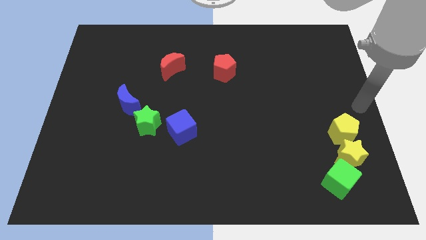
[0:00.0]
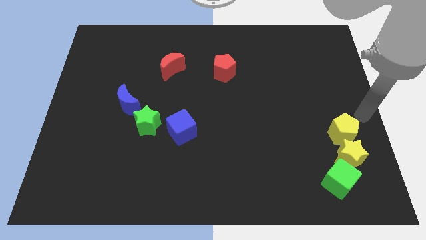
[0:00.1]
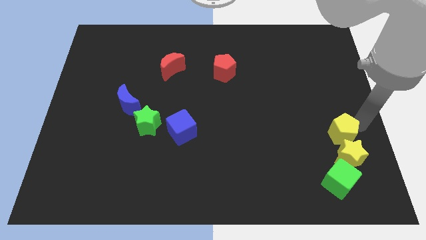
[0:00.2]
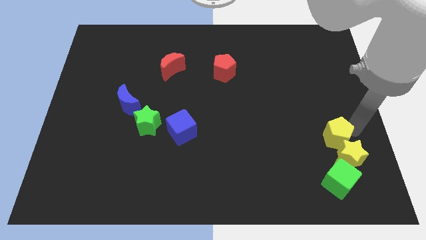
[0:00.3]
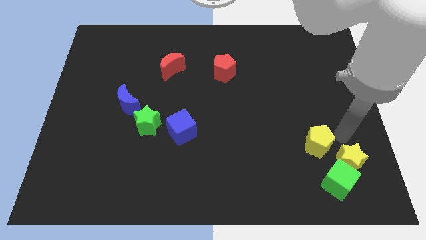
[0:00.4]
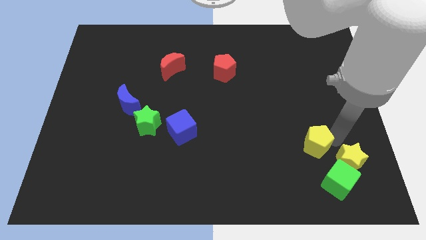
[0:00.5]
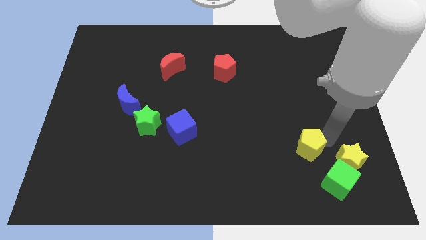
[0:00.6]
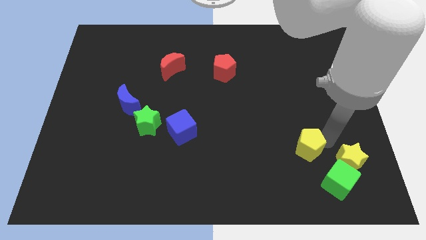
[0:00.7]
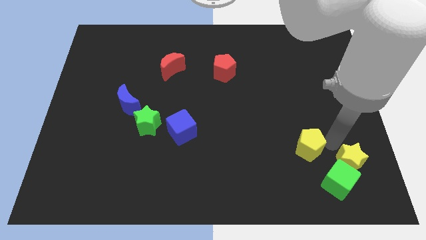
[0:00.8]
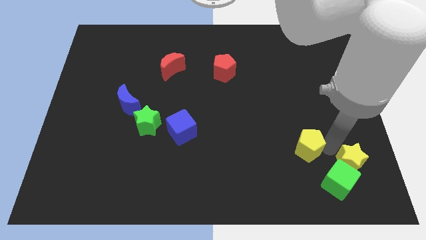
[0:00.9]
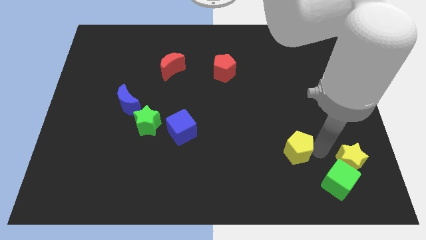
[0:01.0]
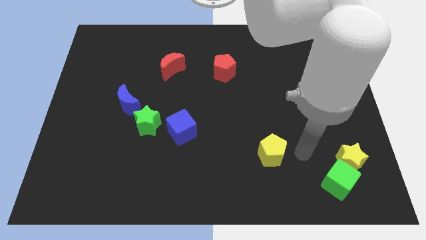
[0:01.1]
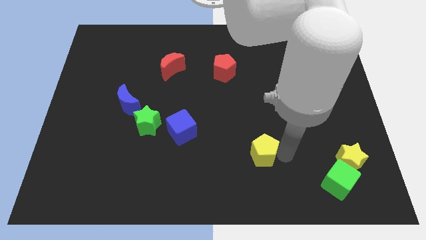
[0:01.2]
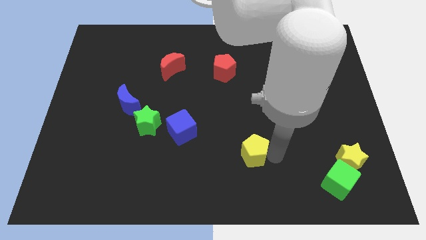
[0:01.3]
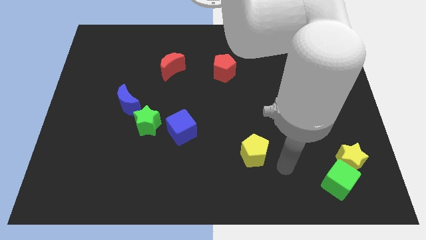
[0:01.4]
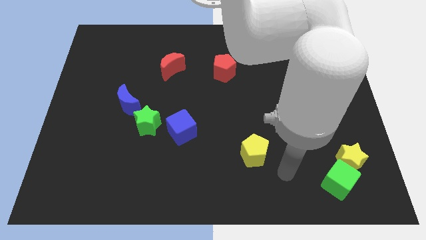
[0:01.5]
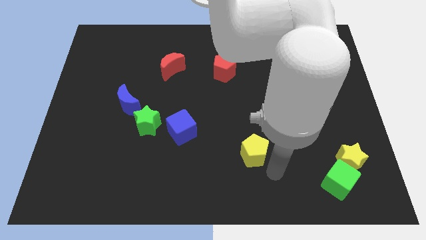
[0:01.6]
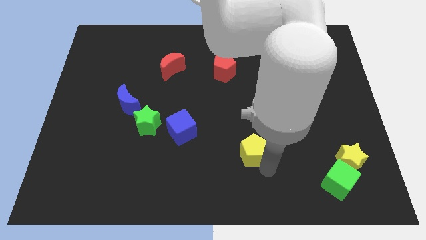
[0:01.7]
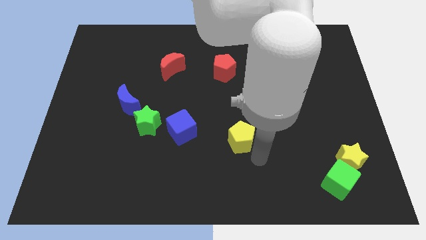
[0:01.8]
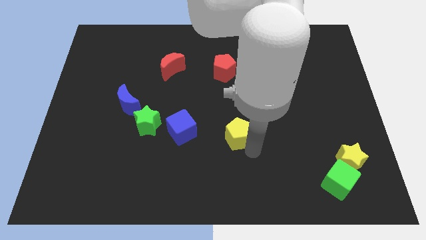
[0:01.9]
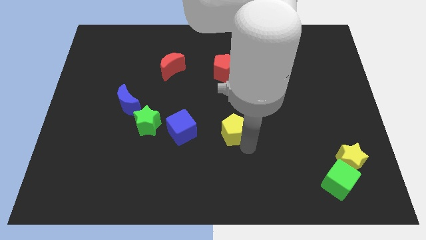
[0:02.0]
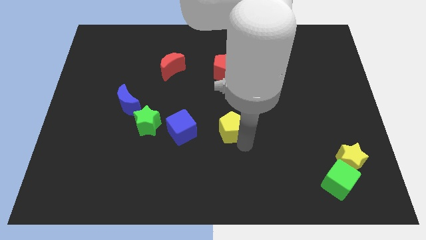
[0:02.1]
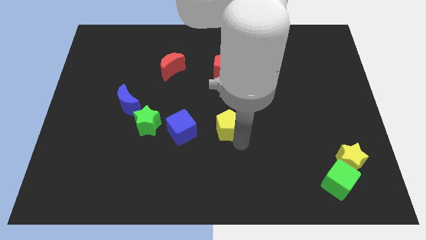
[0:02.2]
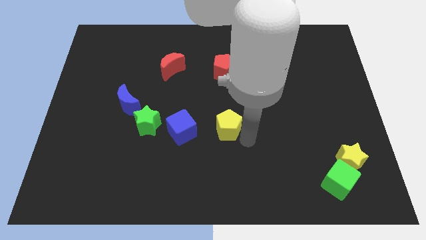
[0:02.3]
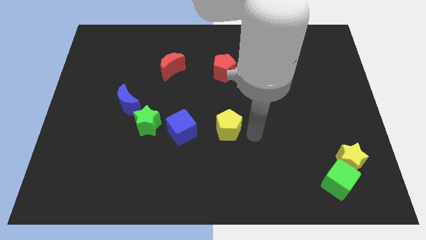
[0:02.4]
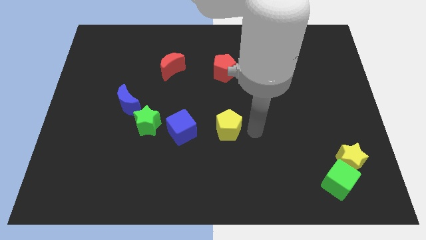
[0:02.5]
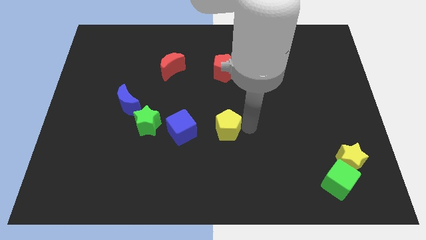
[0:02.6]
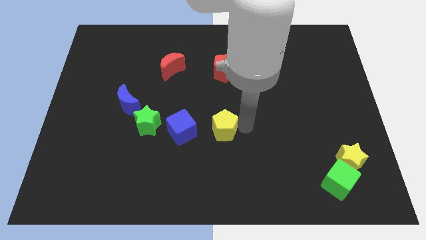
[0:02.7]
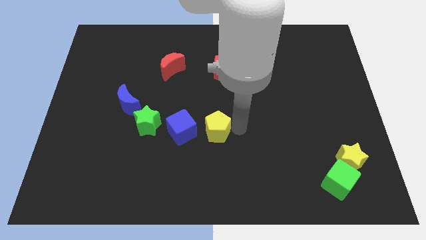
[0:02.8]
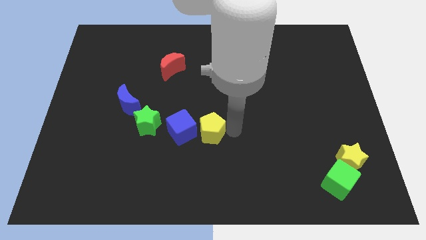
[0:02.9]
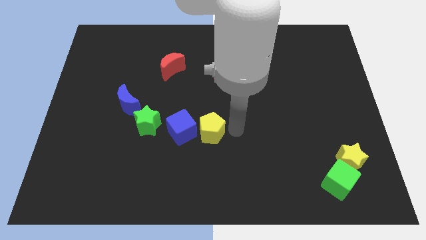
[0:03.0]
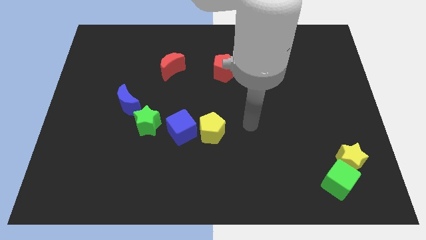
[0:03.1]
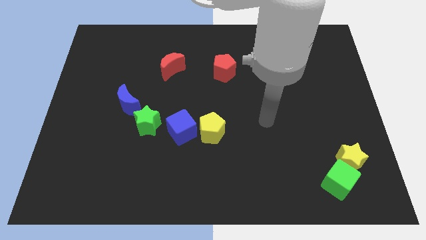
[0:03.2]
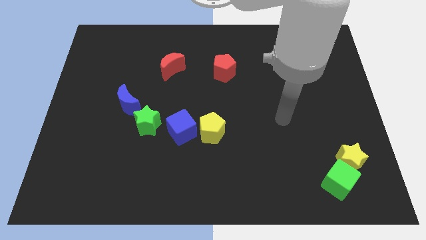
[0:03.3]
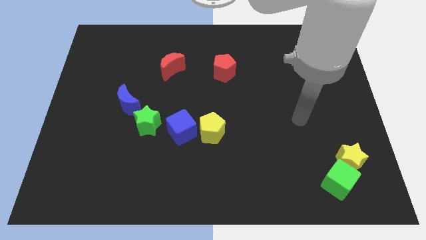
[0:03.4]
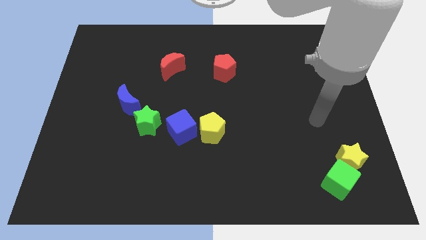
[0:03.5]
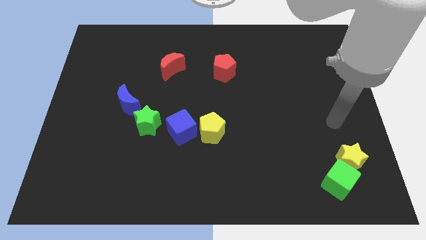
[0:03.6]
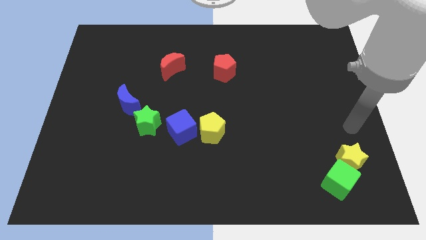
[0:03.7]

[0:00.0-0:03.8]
move the yellow pentagon to the right of the blue cube

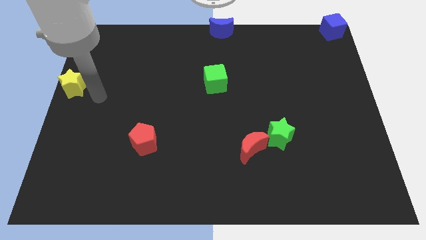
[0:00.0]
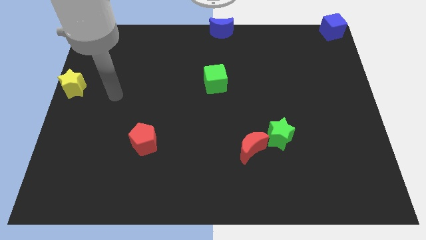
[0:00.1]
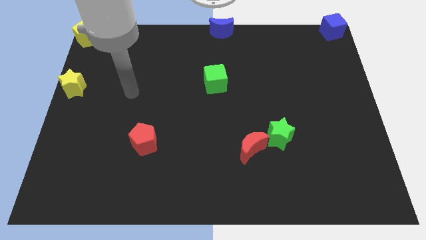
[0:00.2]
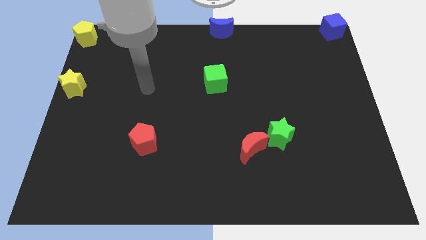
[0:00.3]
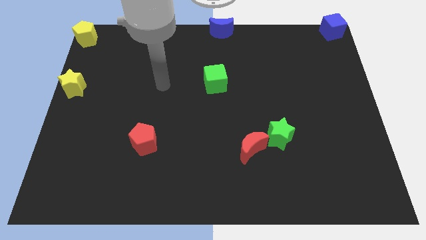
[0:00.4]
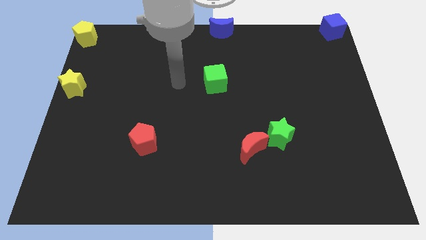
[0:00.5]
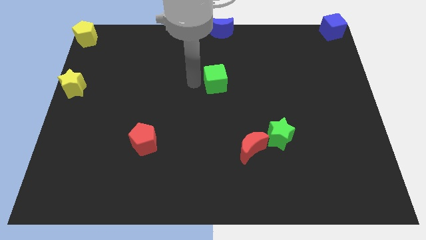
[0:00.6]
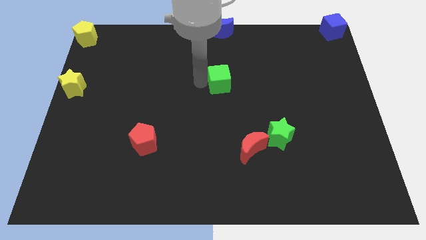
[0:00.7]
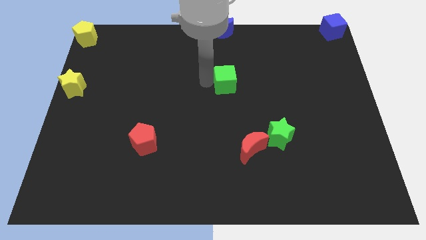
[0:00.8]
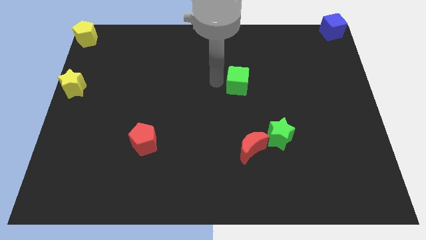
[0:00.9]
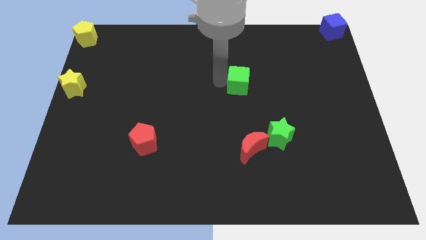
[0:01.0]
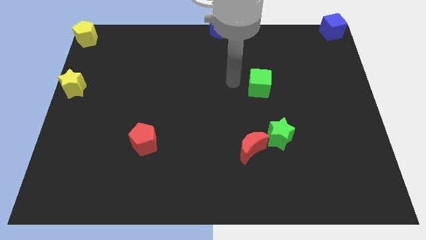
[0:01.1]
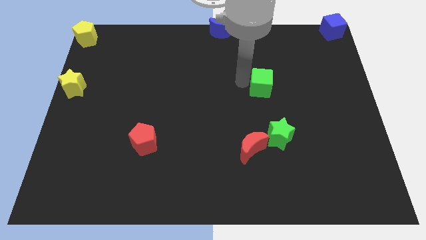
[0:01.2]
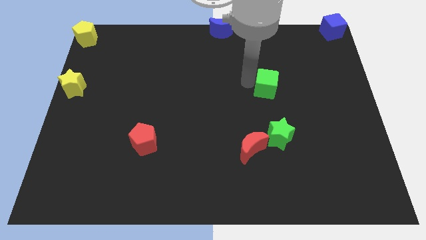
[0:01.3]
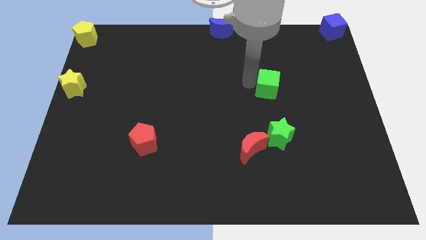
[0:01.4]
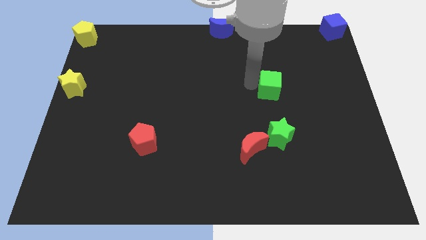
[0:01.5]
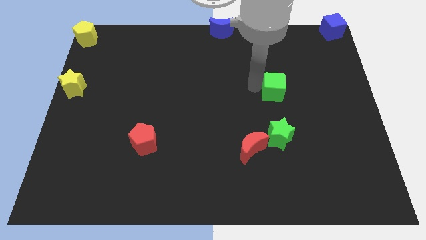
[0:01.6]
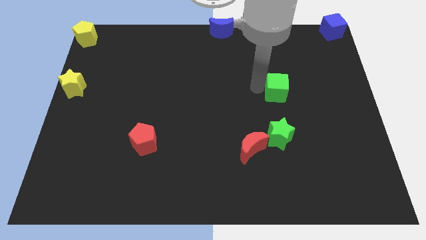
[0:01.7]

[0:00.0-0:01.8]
move the green cube above the green star

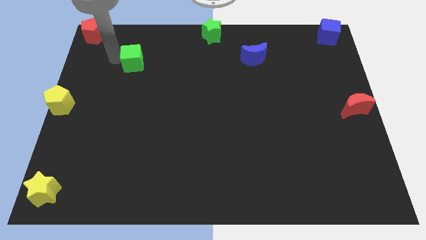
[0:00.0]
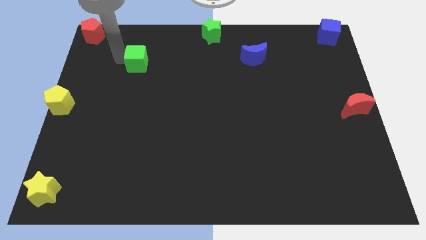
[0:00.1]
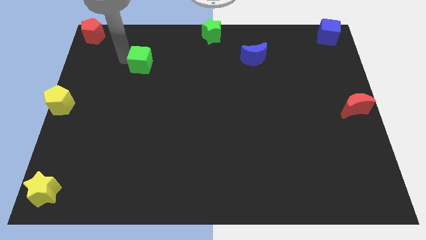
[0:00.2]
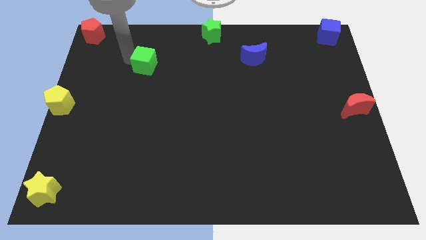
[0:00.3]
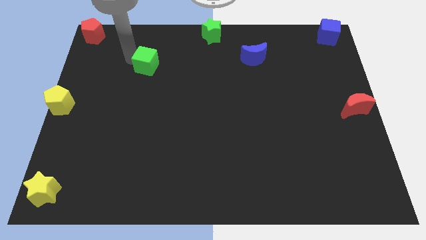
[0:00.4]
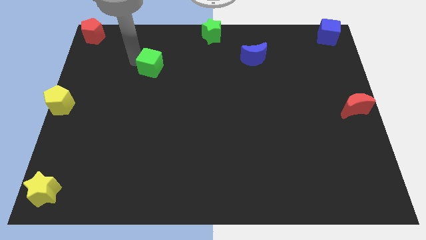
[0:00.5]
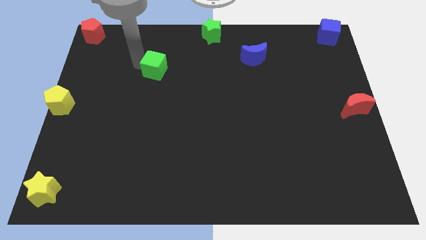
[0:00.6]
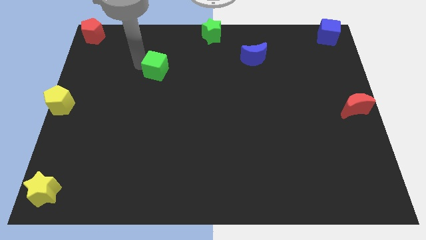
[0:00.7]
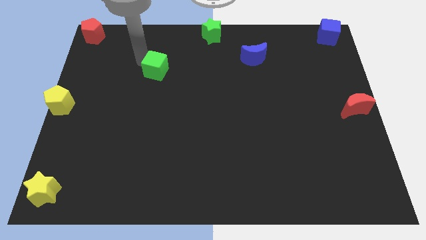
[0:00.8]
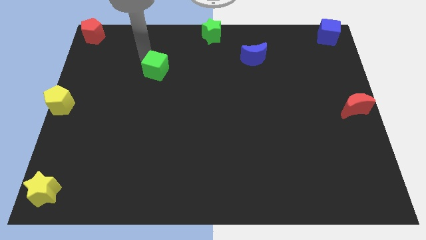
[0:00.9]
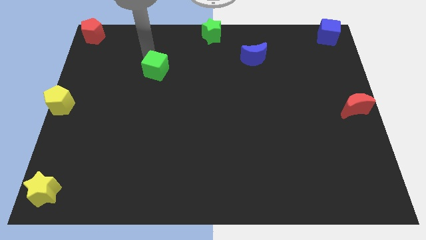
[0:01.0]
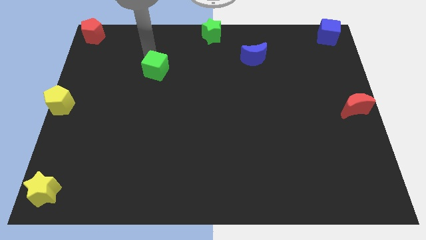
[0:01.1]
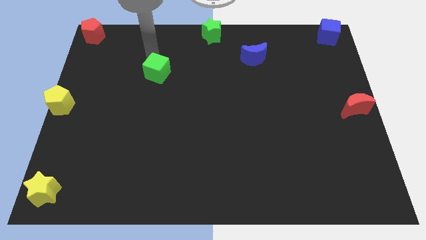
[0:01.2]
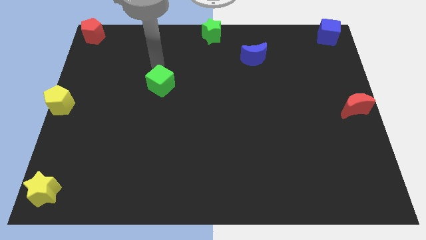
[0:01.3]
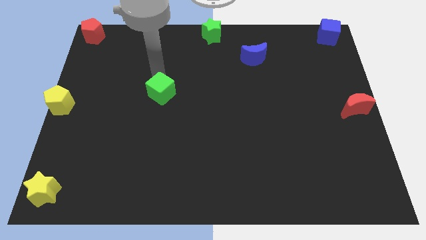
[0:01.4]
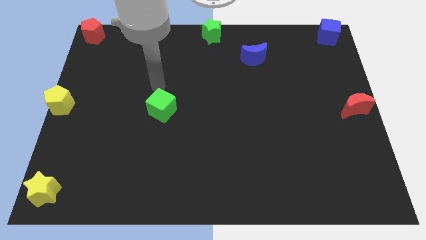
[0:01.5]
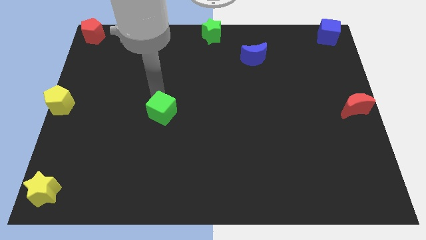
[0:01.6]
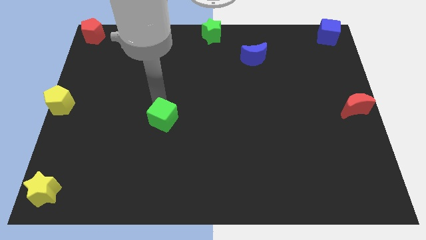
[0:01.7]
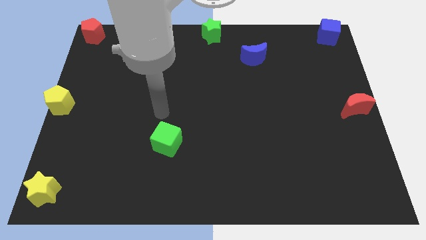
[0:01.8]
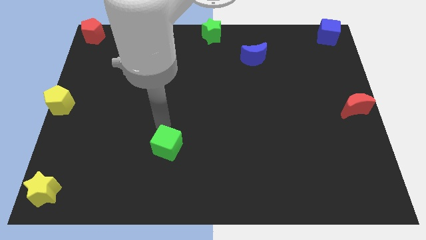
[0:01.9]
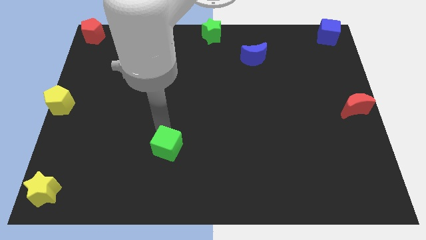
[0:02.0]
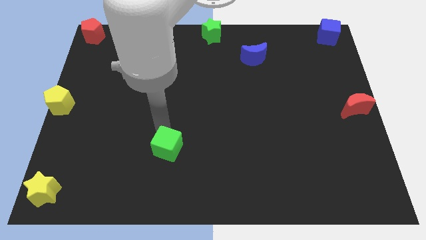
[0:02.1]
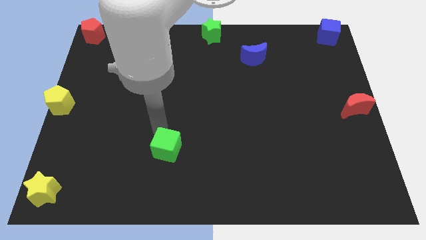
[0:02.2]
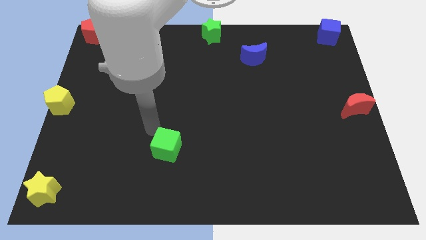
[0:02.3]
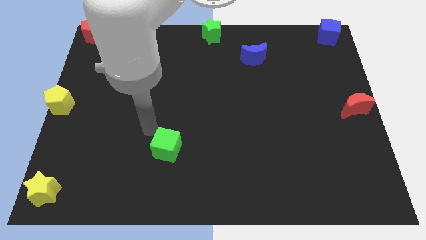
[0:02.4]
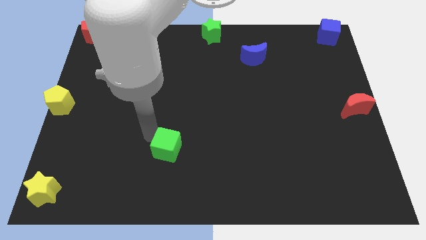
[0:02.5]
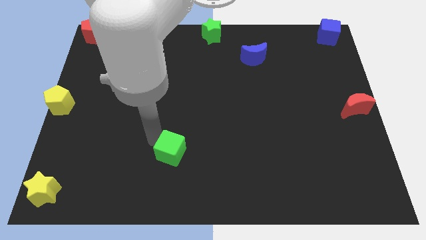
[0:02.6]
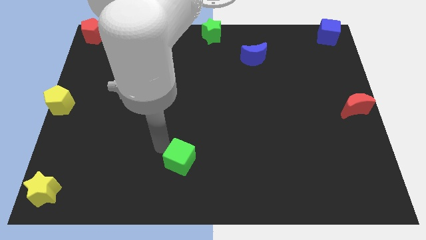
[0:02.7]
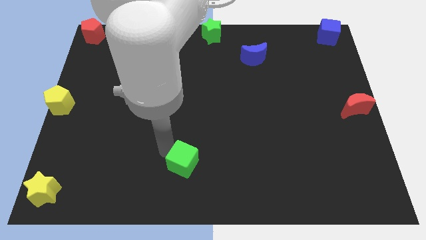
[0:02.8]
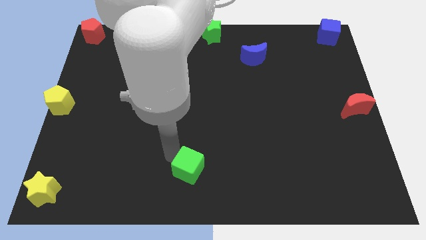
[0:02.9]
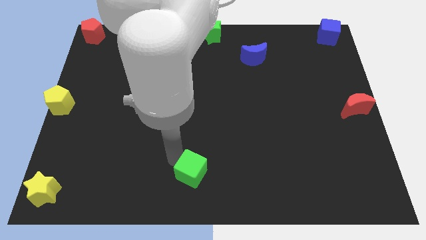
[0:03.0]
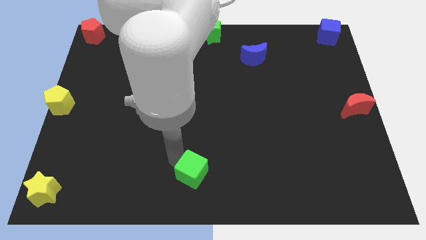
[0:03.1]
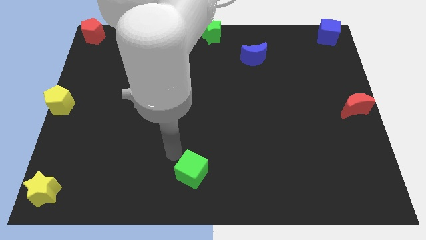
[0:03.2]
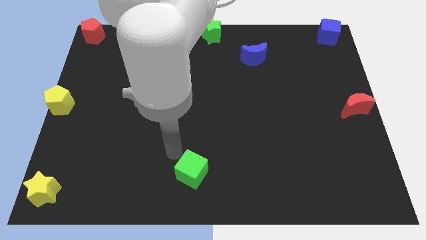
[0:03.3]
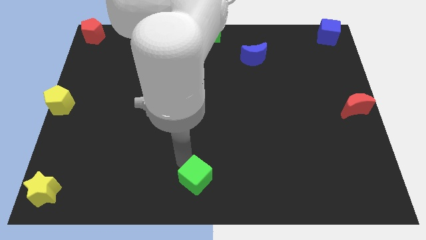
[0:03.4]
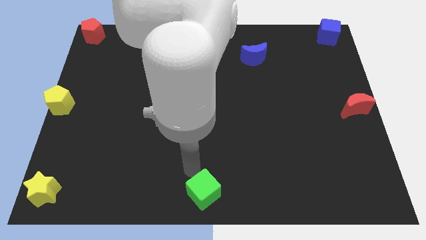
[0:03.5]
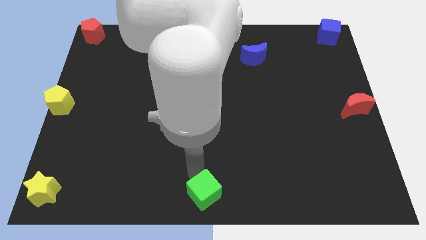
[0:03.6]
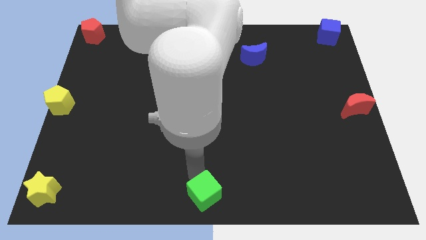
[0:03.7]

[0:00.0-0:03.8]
move the green cube to the bottom center of the board
